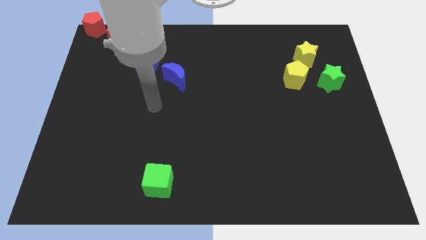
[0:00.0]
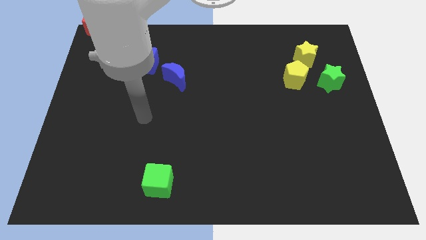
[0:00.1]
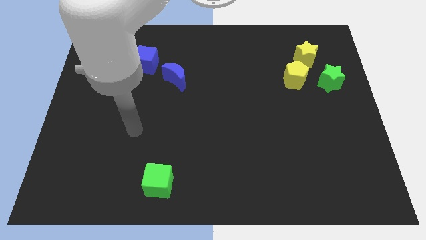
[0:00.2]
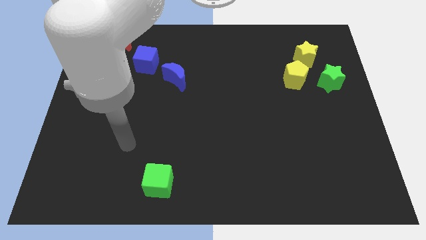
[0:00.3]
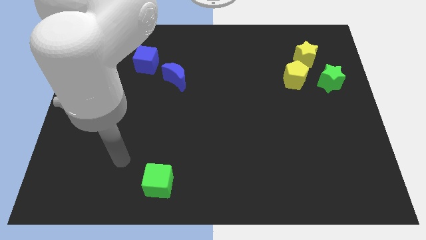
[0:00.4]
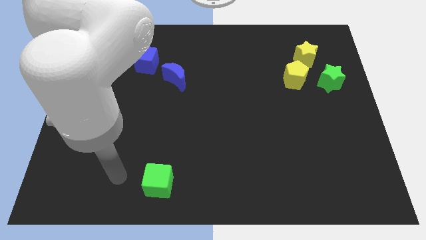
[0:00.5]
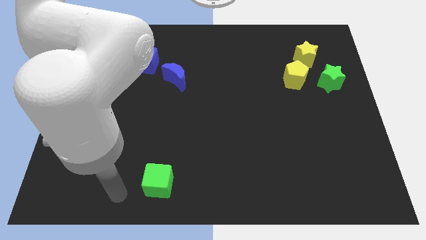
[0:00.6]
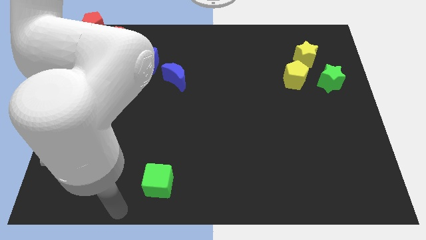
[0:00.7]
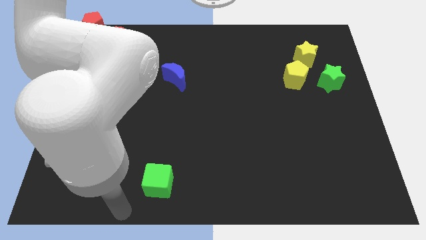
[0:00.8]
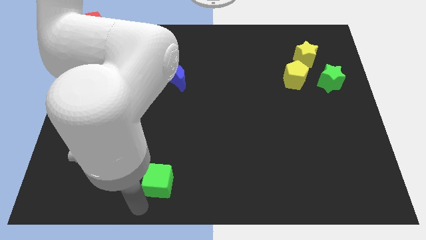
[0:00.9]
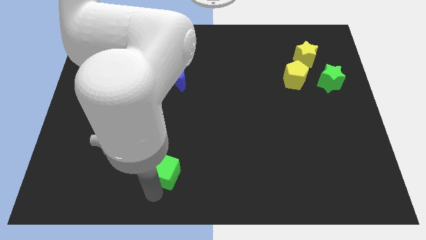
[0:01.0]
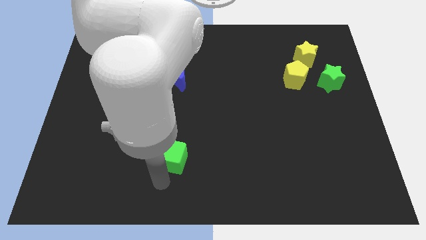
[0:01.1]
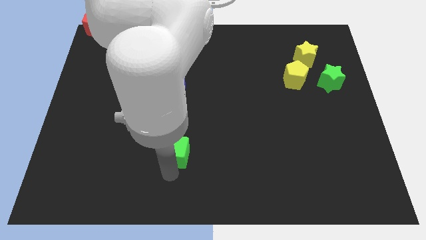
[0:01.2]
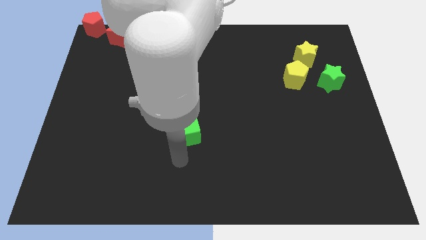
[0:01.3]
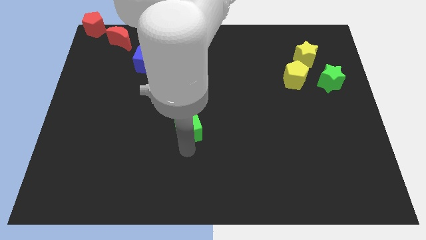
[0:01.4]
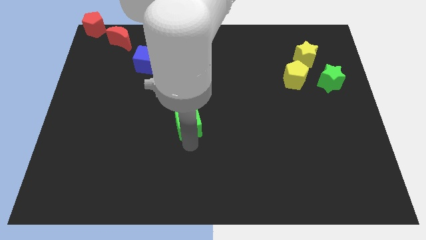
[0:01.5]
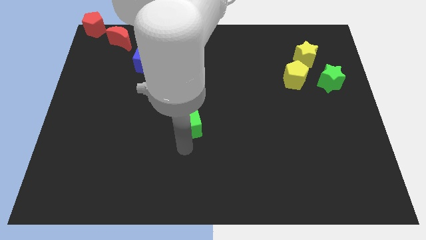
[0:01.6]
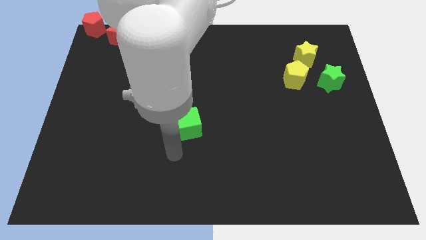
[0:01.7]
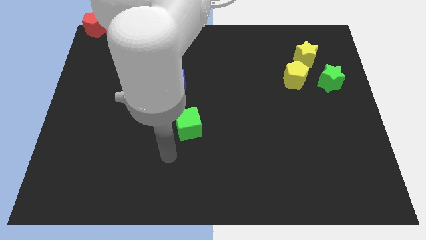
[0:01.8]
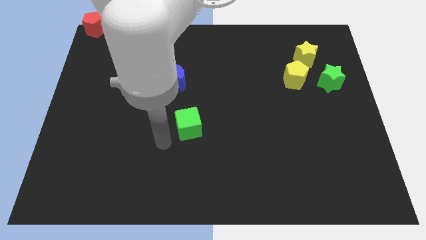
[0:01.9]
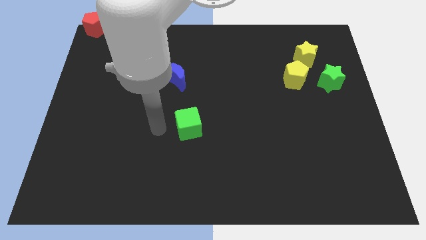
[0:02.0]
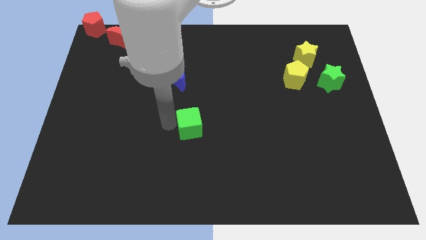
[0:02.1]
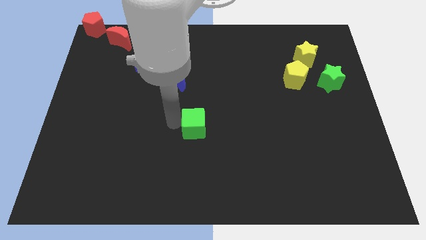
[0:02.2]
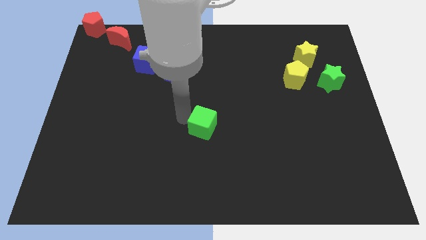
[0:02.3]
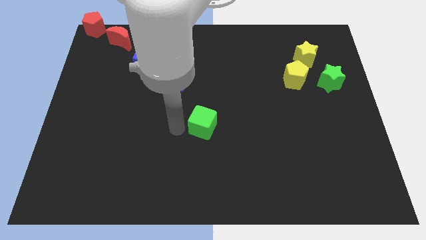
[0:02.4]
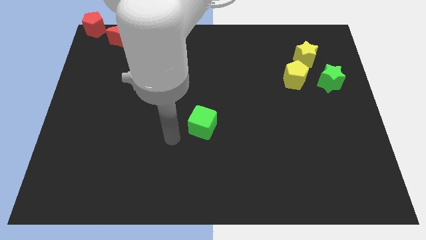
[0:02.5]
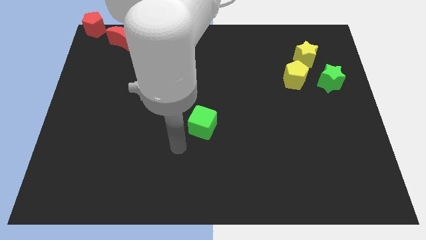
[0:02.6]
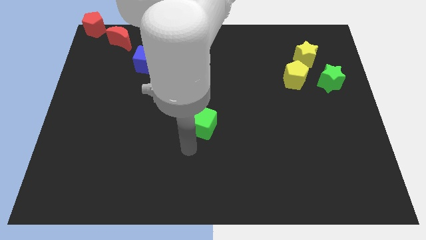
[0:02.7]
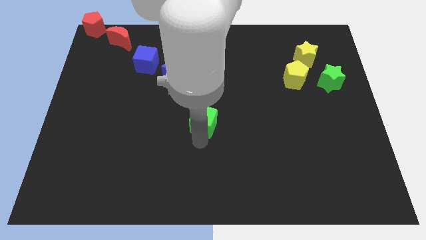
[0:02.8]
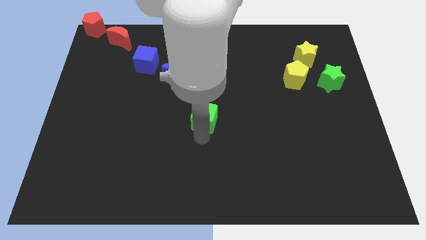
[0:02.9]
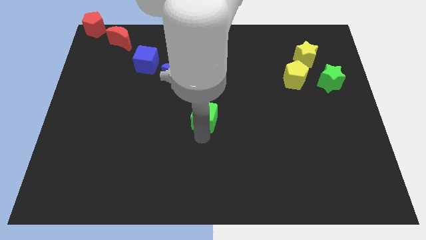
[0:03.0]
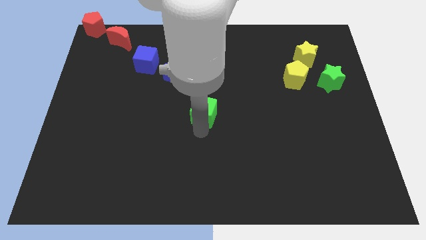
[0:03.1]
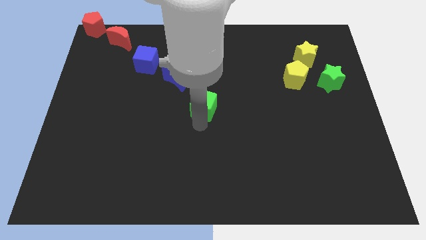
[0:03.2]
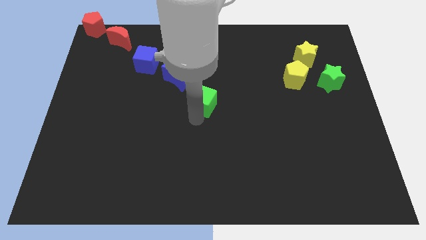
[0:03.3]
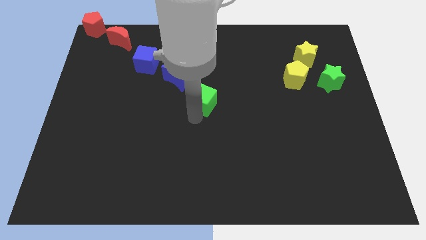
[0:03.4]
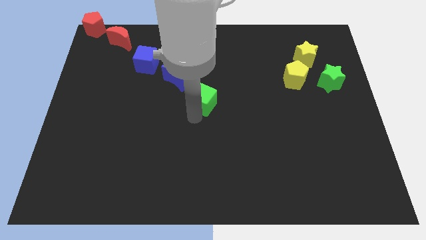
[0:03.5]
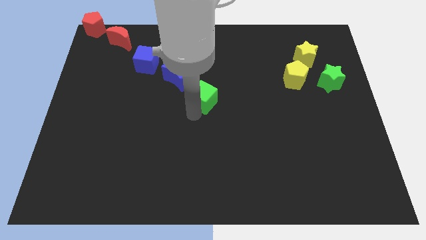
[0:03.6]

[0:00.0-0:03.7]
push the green cube upwards

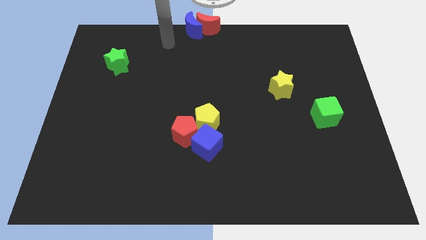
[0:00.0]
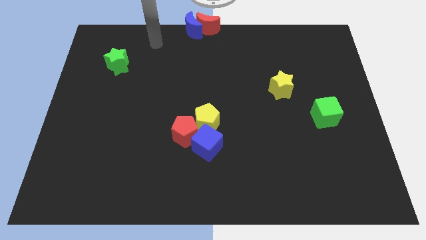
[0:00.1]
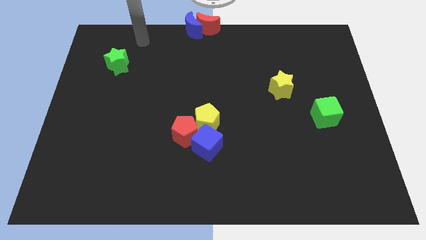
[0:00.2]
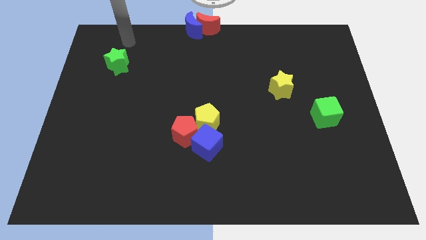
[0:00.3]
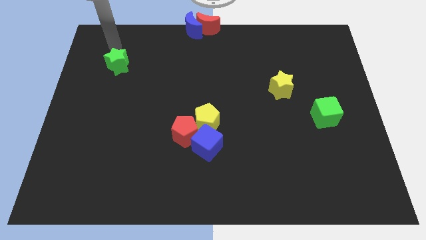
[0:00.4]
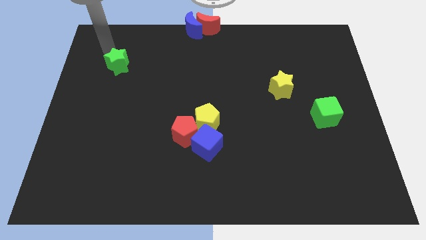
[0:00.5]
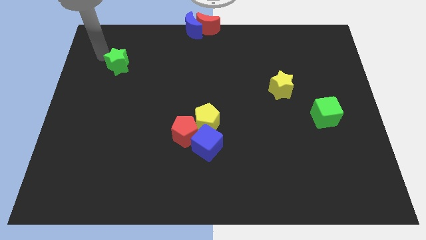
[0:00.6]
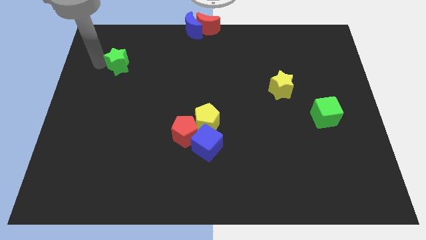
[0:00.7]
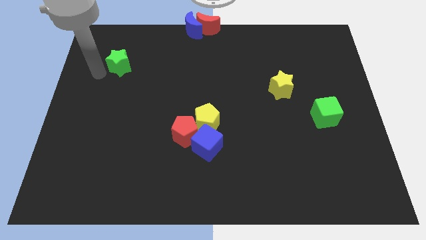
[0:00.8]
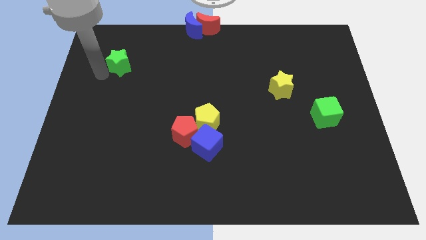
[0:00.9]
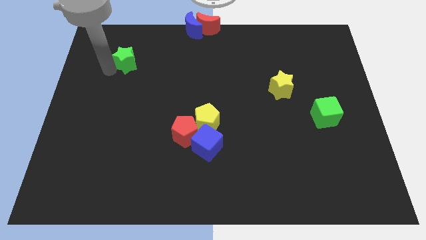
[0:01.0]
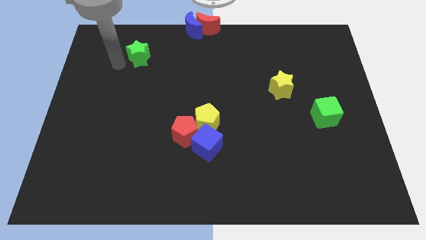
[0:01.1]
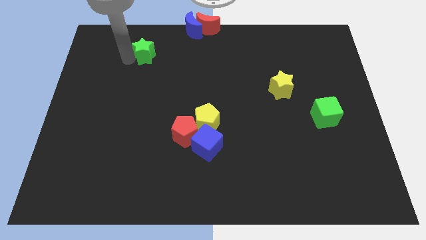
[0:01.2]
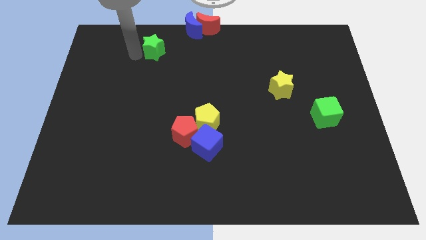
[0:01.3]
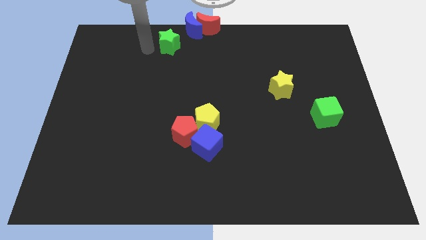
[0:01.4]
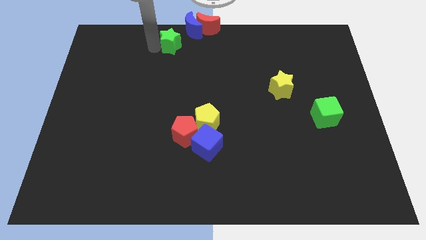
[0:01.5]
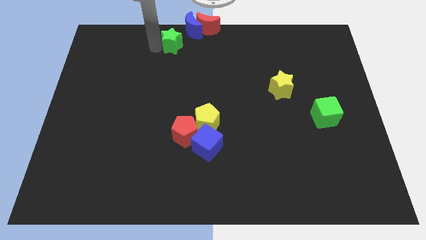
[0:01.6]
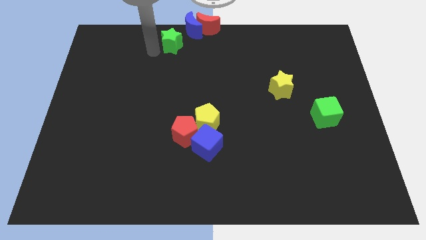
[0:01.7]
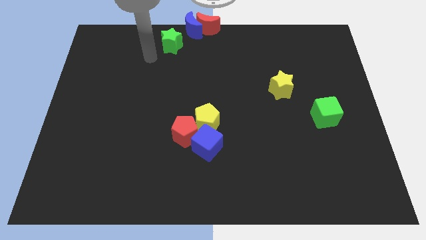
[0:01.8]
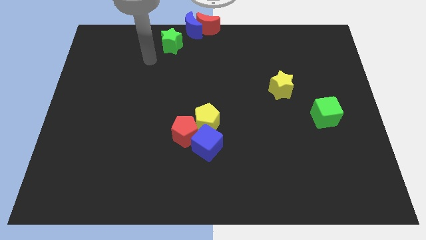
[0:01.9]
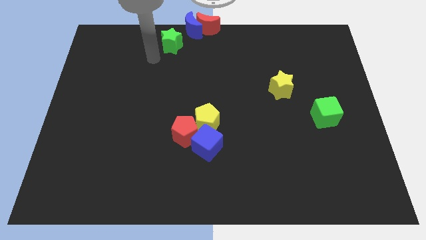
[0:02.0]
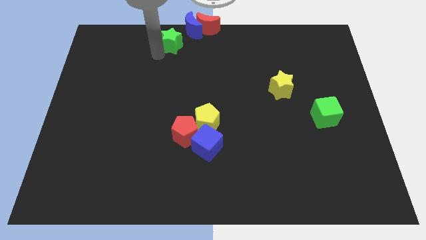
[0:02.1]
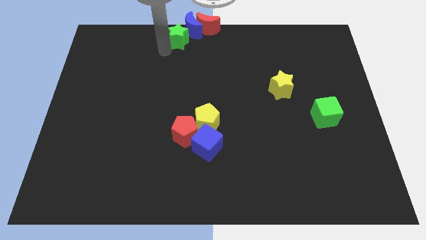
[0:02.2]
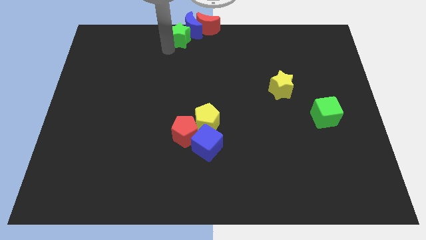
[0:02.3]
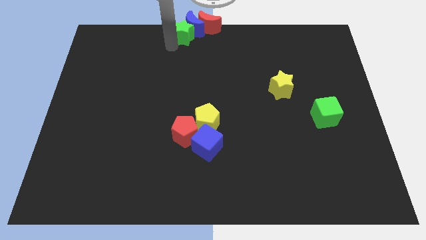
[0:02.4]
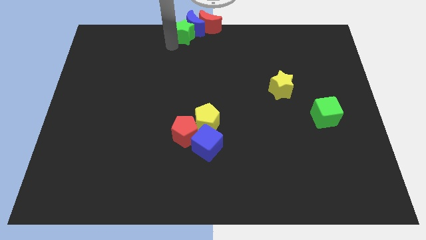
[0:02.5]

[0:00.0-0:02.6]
push green star into the blue crescent

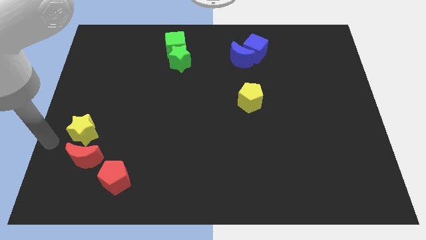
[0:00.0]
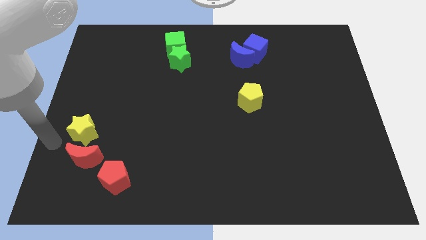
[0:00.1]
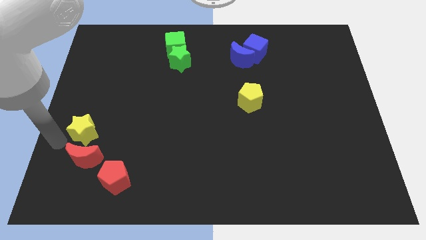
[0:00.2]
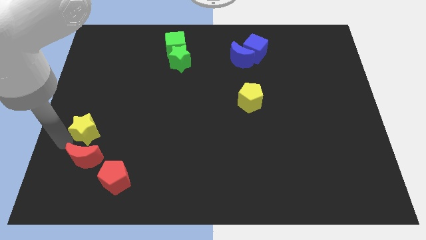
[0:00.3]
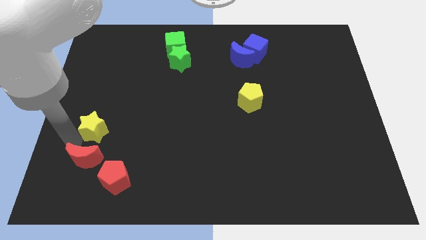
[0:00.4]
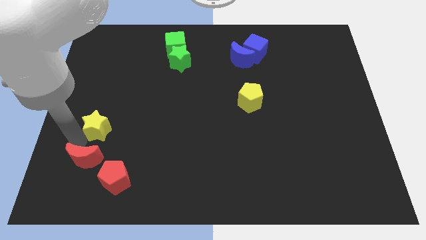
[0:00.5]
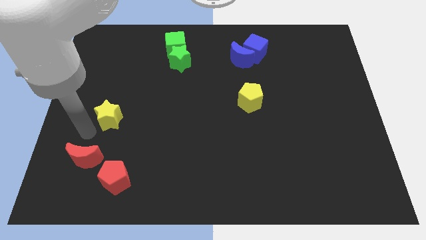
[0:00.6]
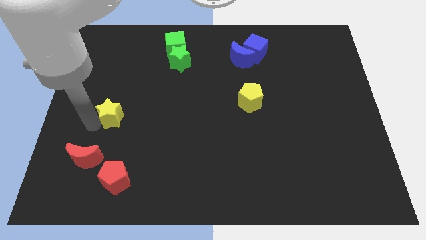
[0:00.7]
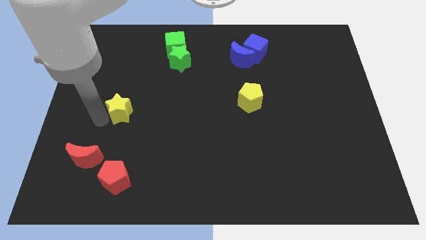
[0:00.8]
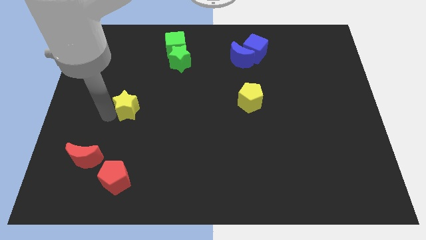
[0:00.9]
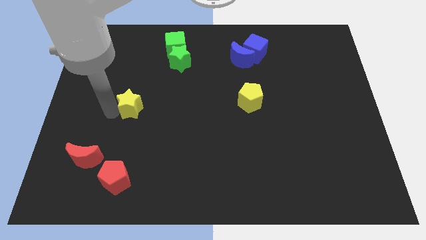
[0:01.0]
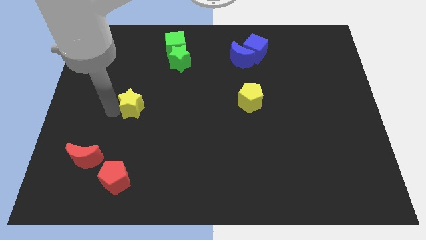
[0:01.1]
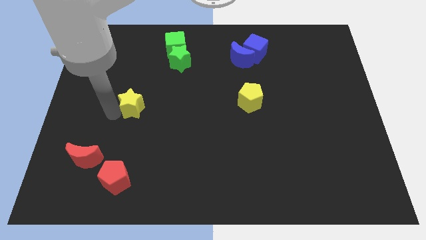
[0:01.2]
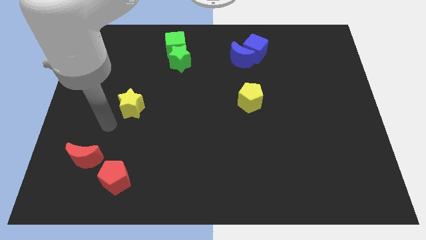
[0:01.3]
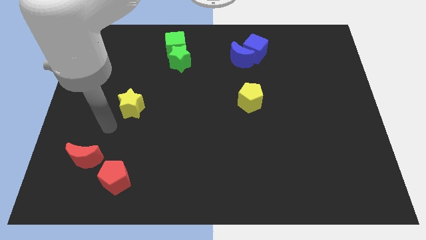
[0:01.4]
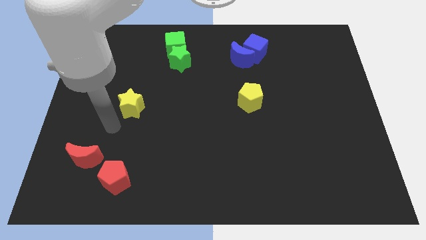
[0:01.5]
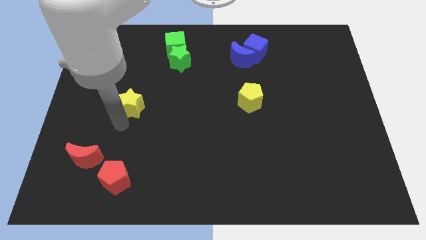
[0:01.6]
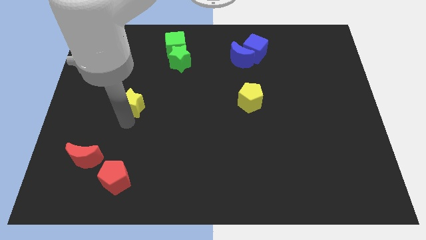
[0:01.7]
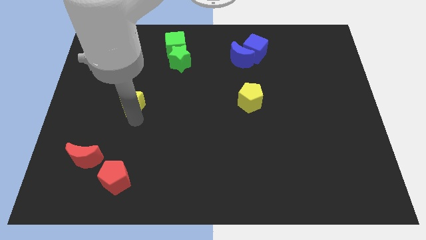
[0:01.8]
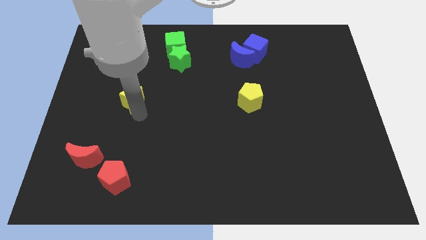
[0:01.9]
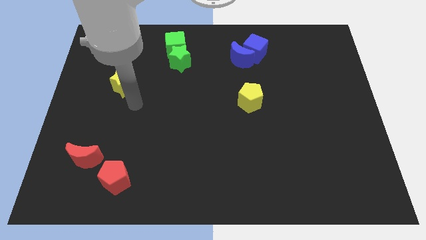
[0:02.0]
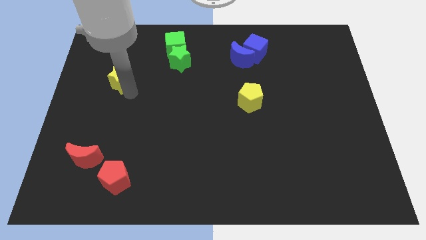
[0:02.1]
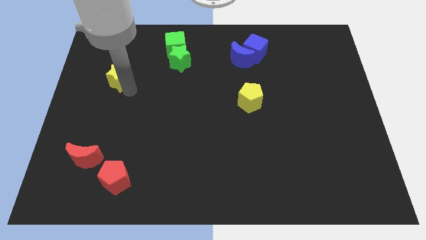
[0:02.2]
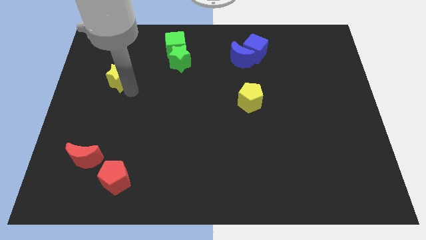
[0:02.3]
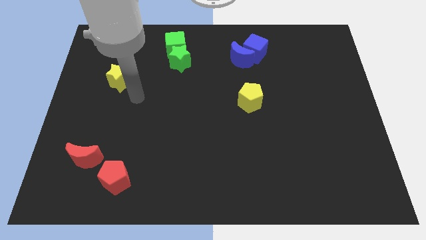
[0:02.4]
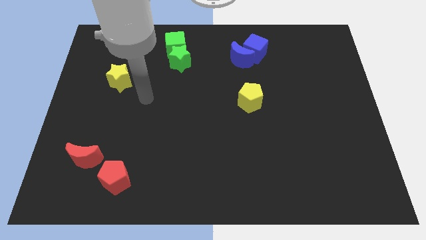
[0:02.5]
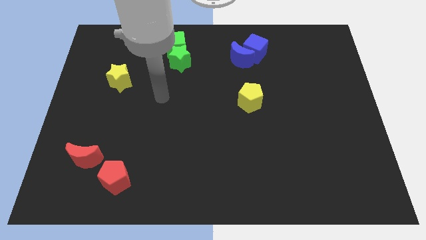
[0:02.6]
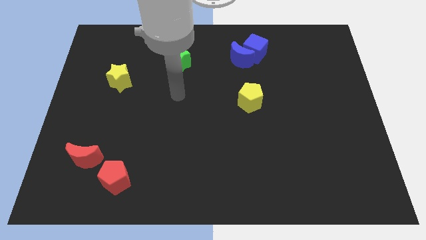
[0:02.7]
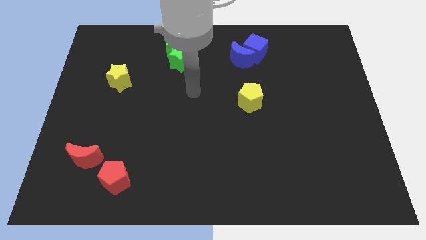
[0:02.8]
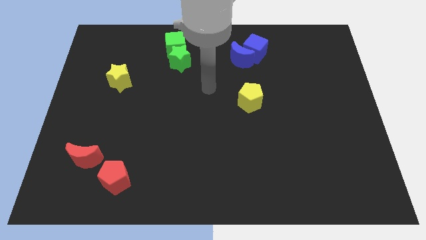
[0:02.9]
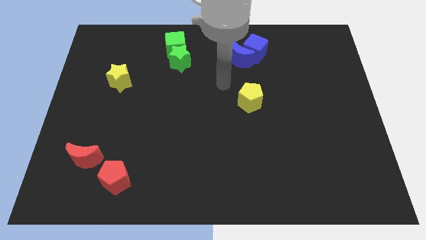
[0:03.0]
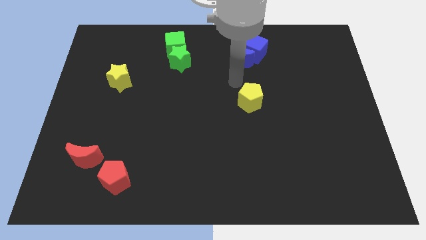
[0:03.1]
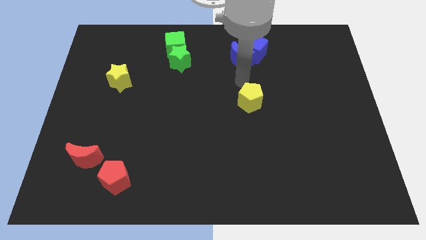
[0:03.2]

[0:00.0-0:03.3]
place yellow star vertically above red moon
